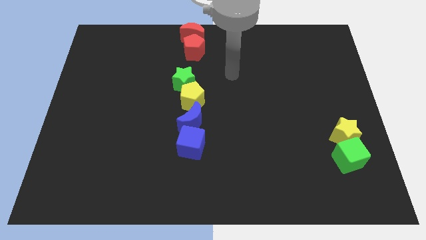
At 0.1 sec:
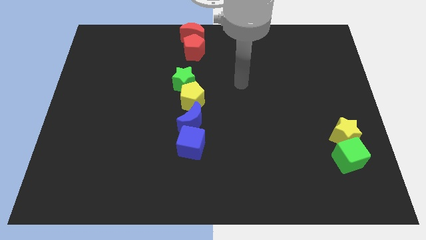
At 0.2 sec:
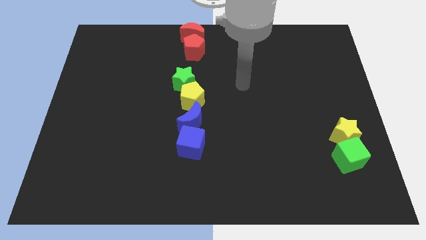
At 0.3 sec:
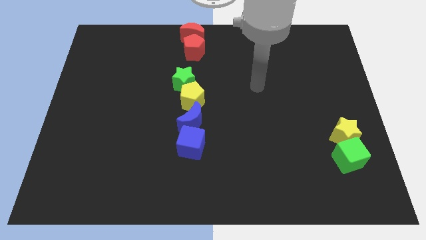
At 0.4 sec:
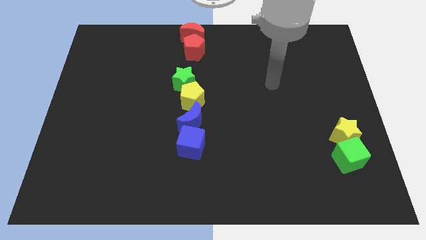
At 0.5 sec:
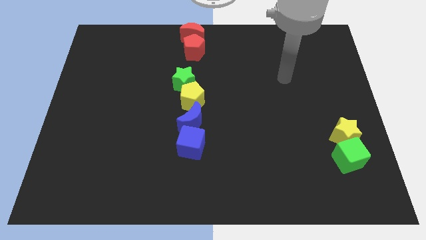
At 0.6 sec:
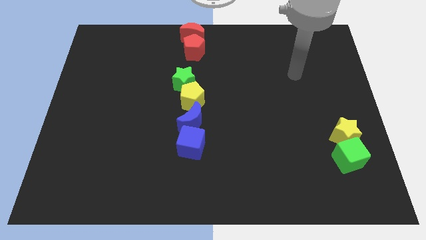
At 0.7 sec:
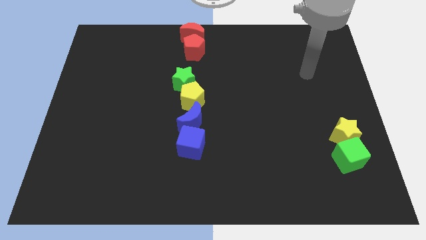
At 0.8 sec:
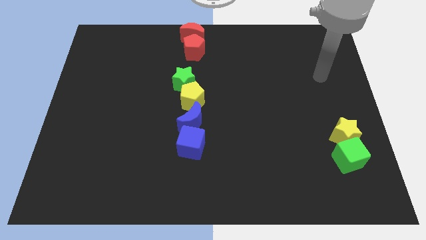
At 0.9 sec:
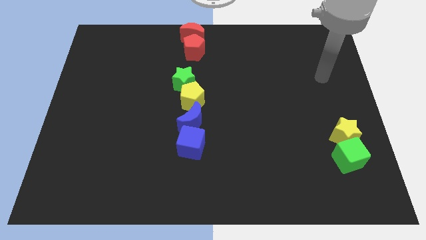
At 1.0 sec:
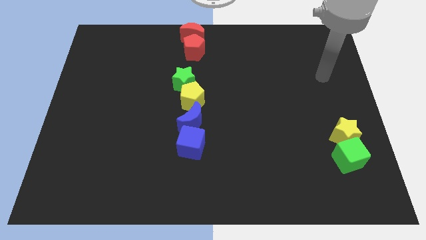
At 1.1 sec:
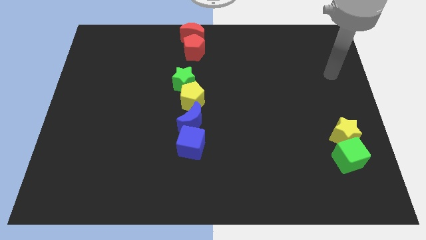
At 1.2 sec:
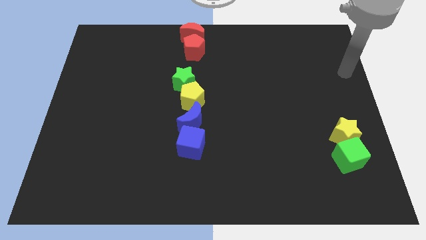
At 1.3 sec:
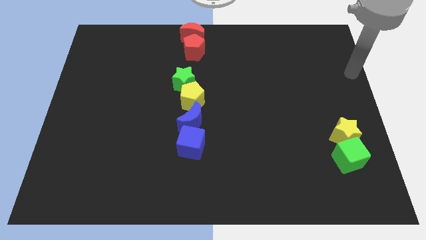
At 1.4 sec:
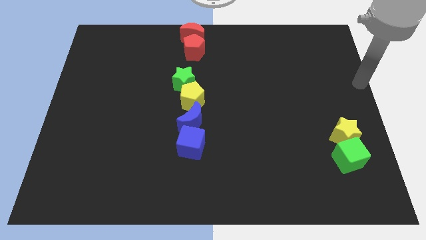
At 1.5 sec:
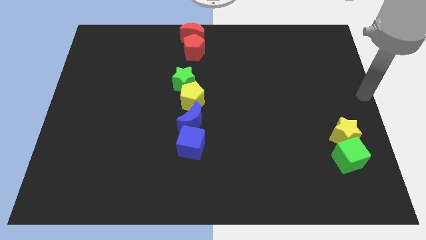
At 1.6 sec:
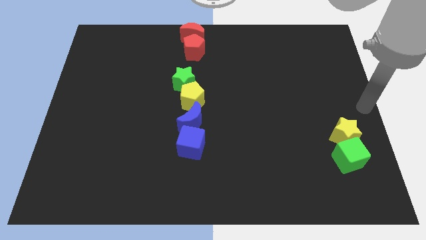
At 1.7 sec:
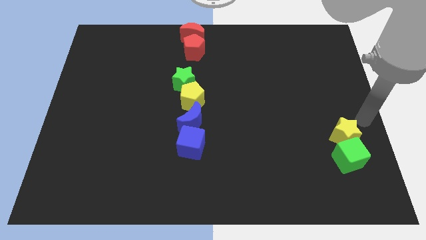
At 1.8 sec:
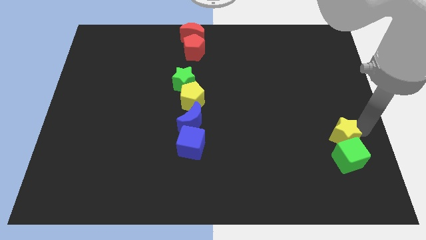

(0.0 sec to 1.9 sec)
move your arm towards the yellow star

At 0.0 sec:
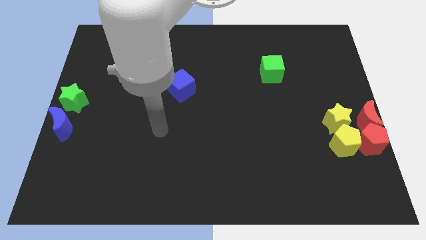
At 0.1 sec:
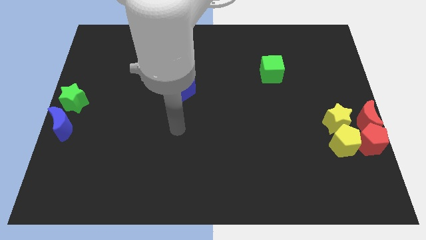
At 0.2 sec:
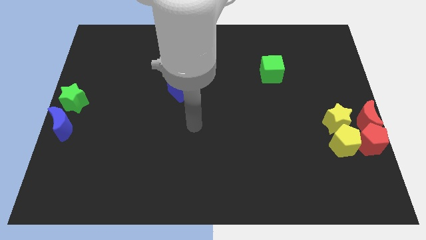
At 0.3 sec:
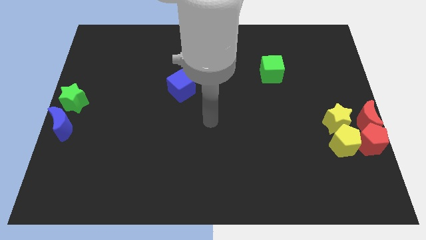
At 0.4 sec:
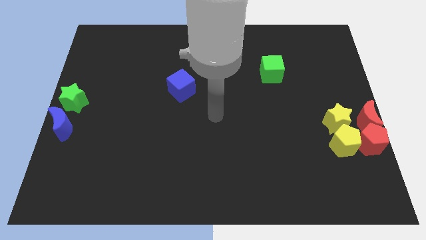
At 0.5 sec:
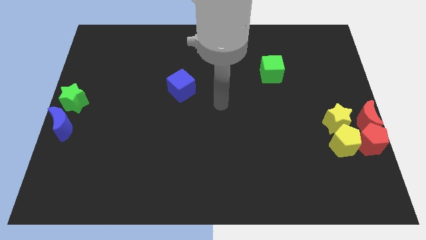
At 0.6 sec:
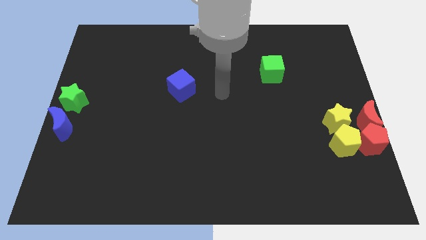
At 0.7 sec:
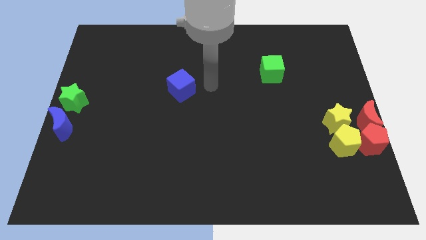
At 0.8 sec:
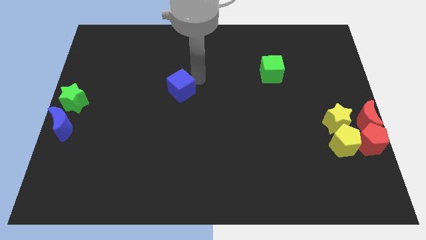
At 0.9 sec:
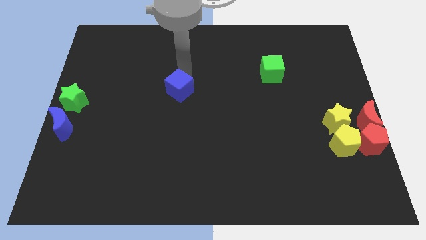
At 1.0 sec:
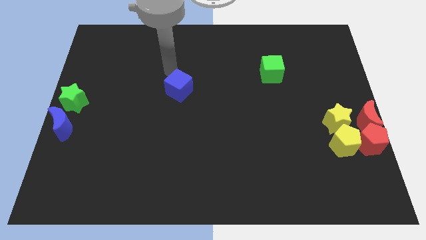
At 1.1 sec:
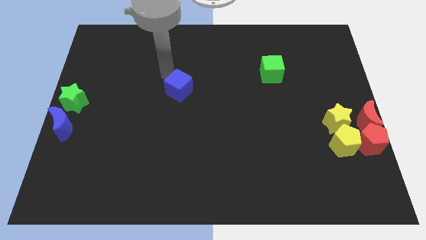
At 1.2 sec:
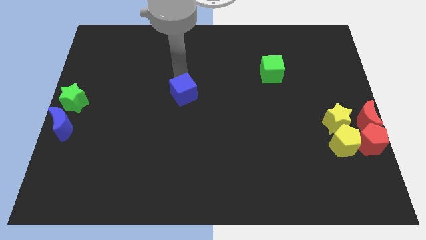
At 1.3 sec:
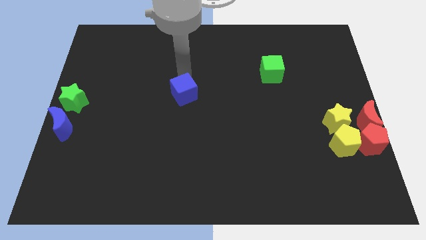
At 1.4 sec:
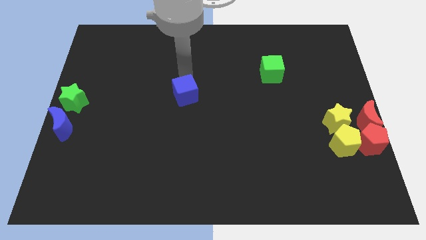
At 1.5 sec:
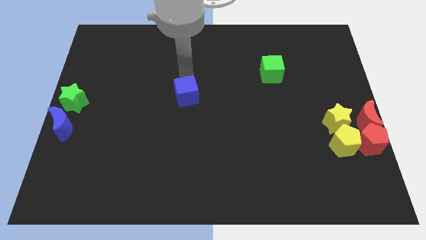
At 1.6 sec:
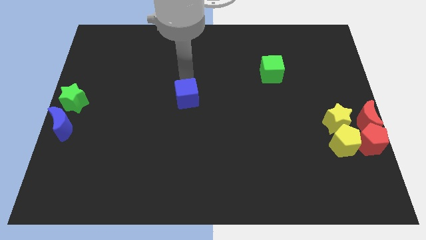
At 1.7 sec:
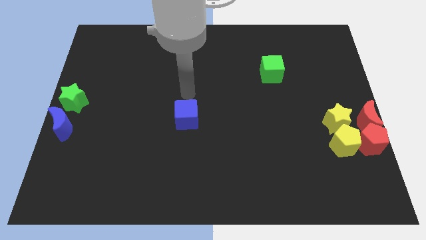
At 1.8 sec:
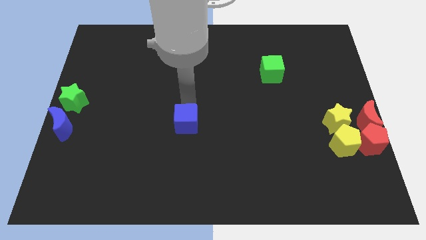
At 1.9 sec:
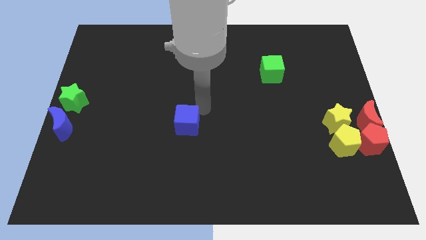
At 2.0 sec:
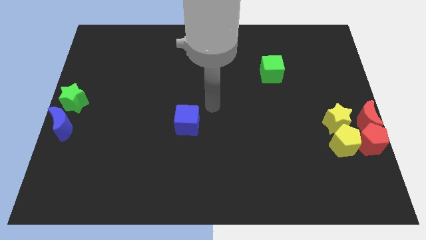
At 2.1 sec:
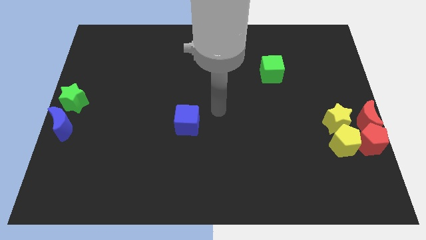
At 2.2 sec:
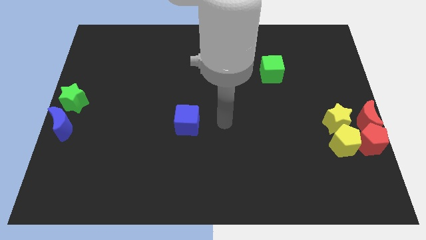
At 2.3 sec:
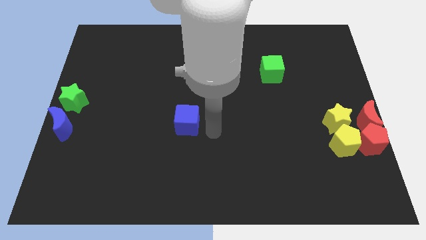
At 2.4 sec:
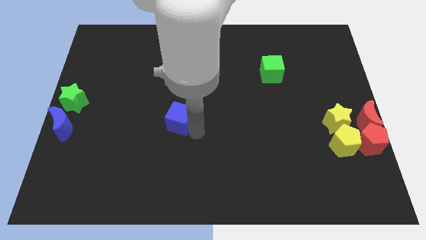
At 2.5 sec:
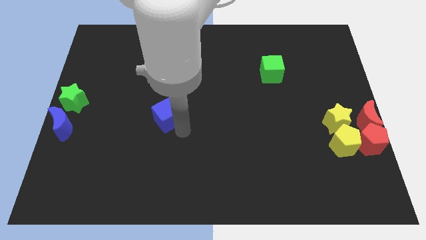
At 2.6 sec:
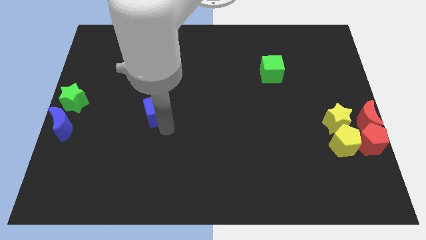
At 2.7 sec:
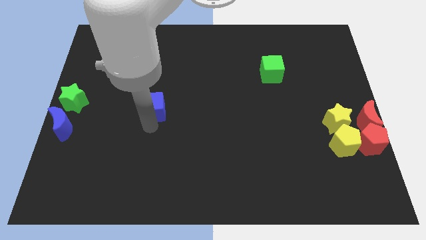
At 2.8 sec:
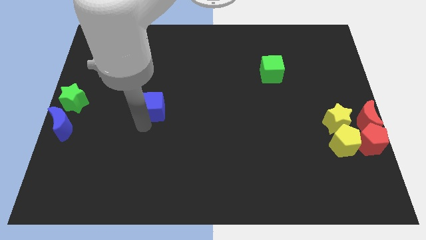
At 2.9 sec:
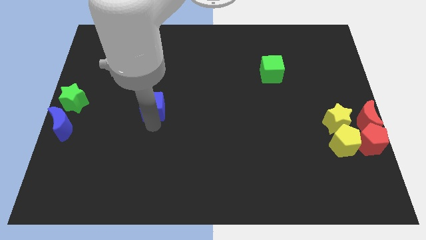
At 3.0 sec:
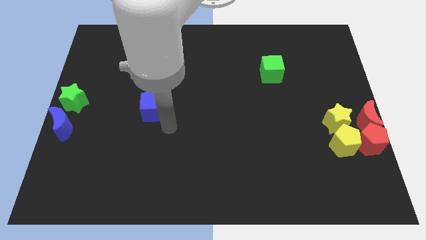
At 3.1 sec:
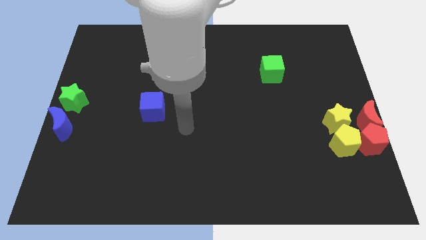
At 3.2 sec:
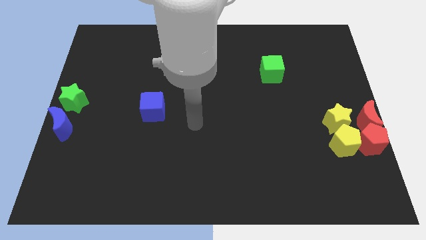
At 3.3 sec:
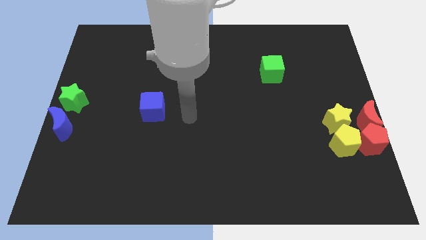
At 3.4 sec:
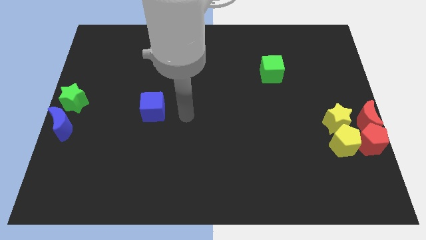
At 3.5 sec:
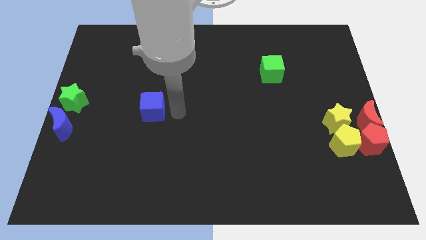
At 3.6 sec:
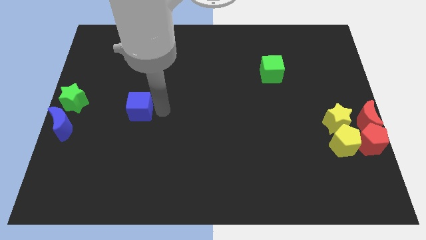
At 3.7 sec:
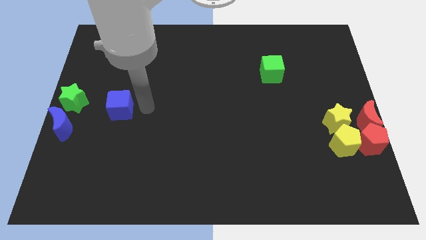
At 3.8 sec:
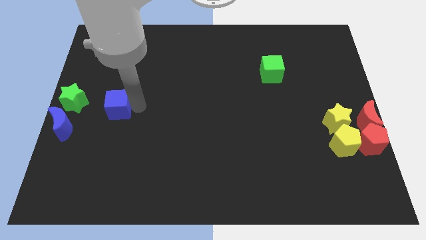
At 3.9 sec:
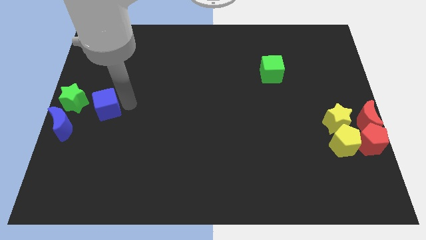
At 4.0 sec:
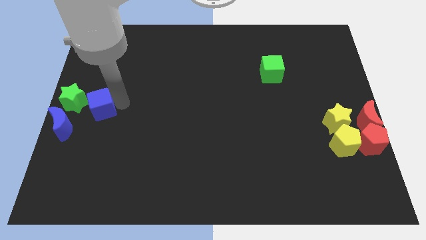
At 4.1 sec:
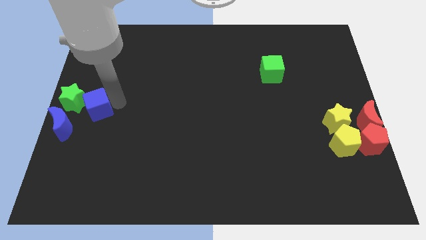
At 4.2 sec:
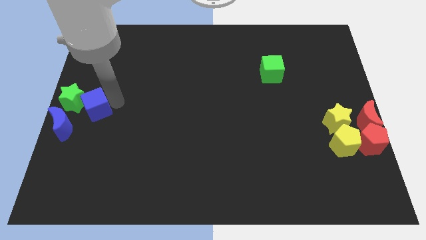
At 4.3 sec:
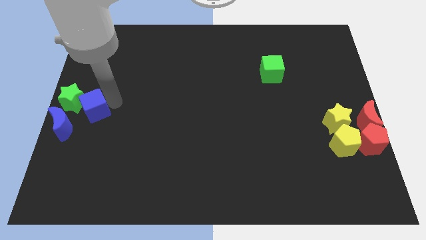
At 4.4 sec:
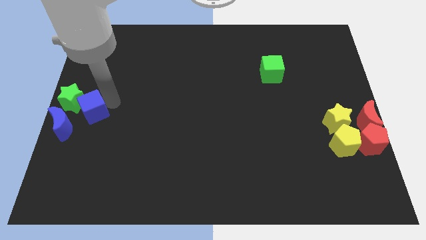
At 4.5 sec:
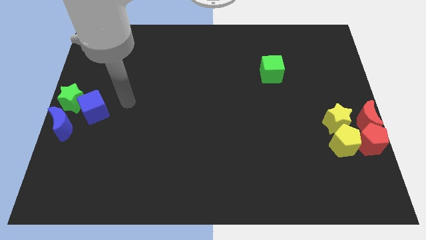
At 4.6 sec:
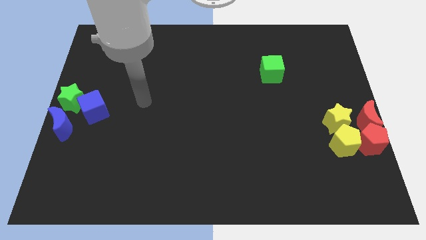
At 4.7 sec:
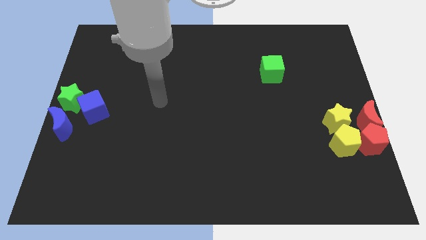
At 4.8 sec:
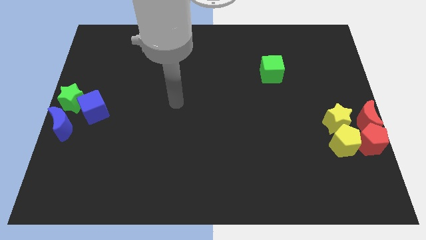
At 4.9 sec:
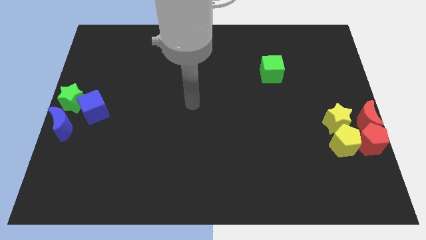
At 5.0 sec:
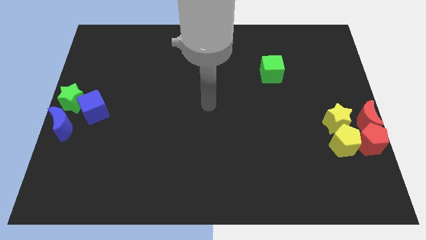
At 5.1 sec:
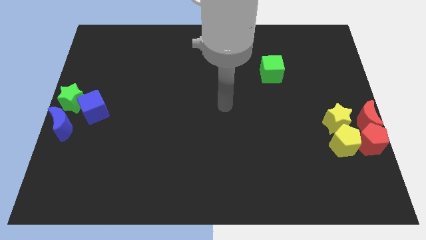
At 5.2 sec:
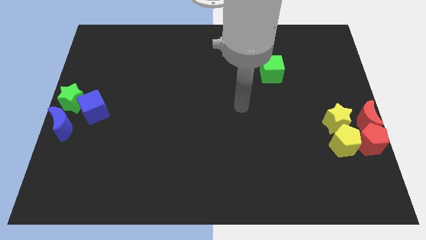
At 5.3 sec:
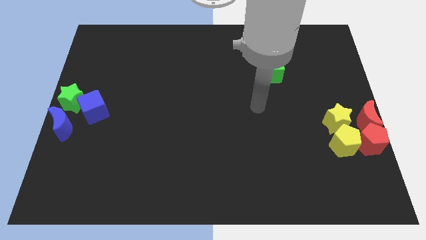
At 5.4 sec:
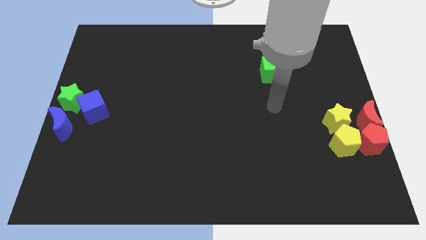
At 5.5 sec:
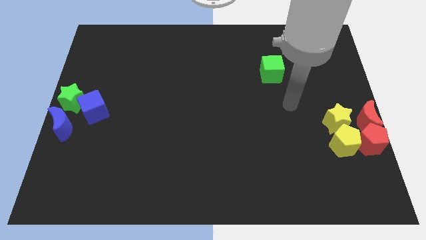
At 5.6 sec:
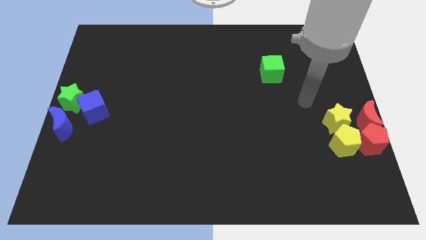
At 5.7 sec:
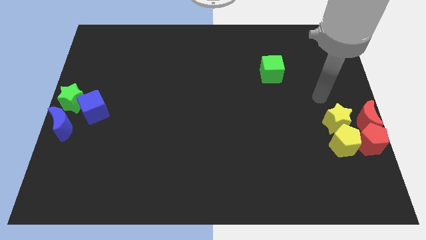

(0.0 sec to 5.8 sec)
move the blue cube towards the left center of the board

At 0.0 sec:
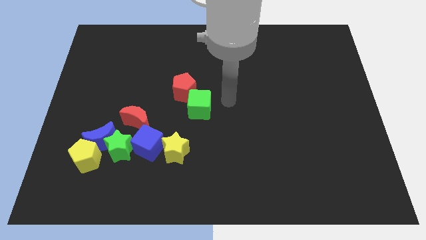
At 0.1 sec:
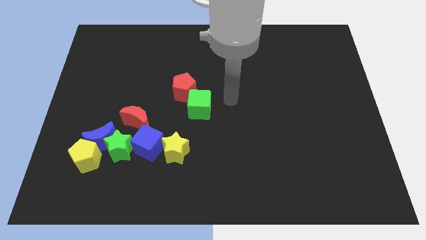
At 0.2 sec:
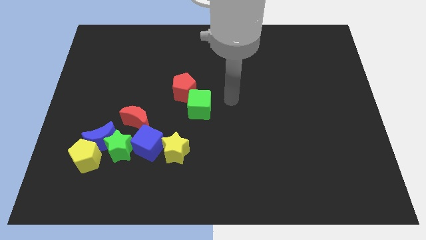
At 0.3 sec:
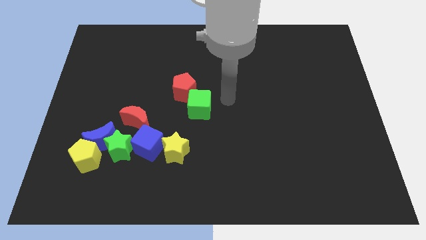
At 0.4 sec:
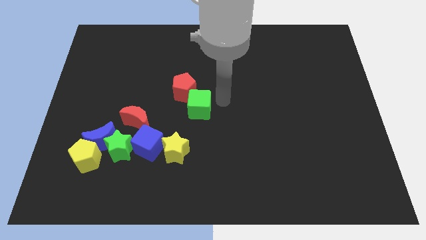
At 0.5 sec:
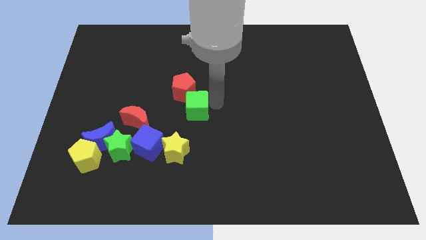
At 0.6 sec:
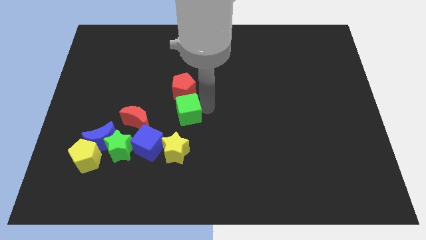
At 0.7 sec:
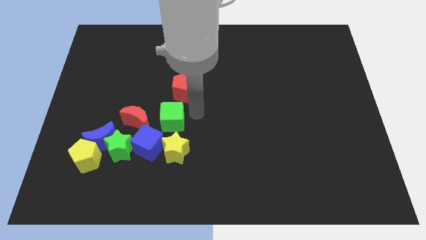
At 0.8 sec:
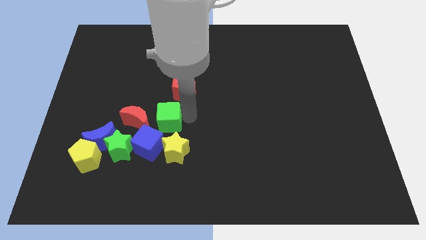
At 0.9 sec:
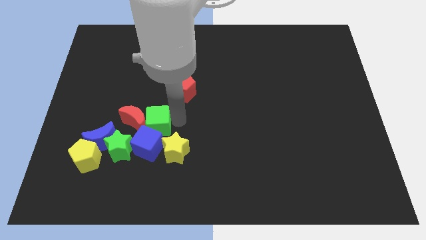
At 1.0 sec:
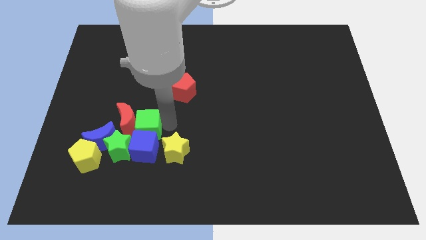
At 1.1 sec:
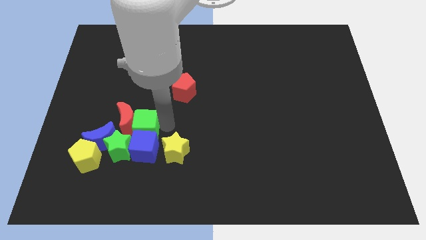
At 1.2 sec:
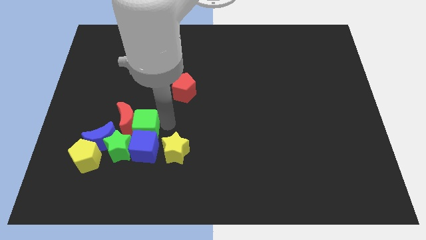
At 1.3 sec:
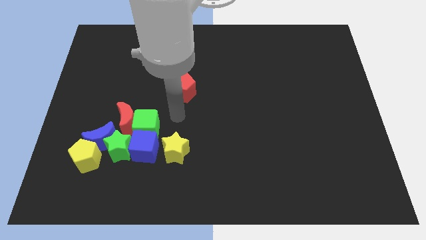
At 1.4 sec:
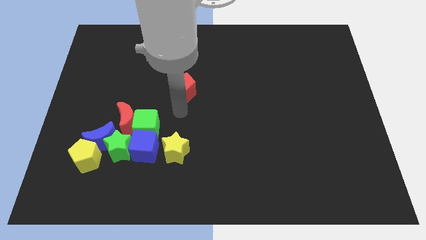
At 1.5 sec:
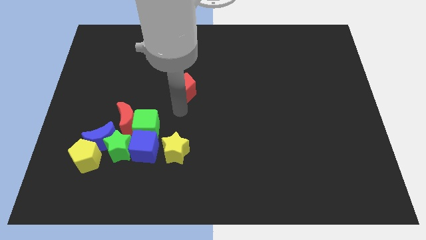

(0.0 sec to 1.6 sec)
place the green cube above the blue cube
